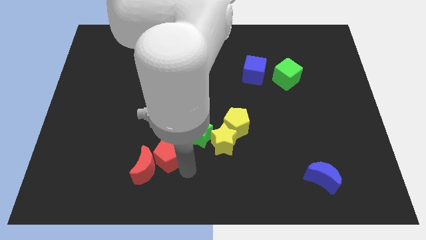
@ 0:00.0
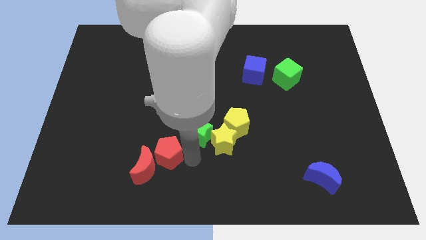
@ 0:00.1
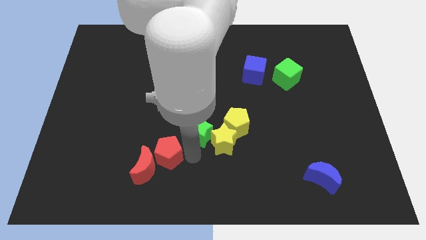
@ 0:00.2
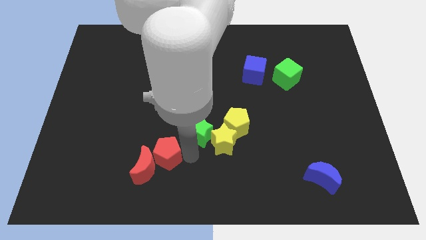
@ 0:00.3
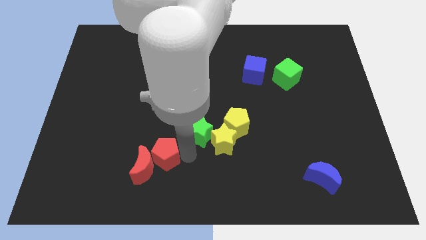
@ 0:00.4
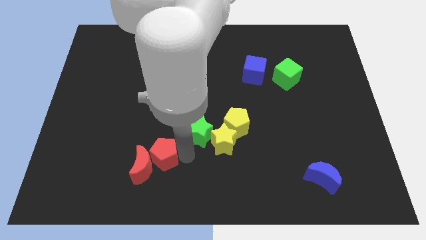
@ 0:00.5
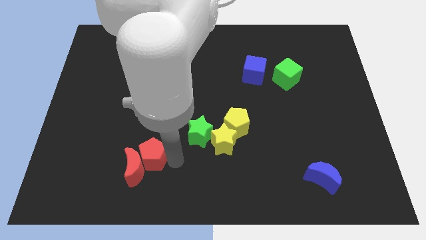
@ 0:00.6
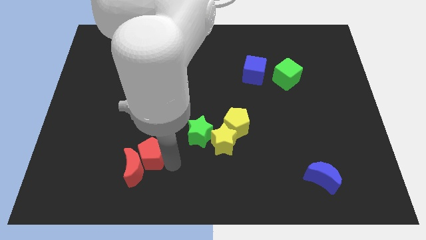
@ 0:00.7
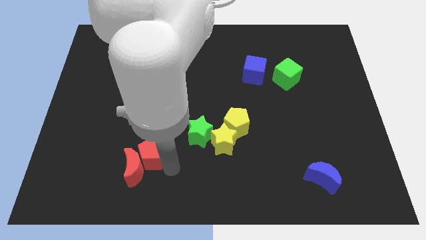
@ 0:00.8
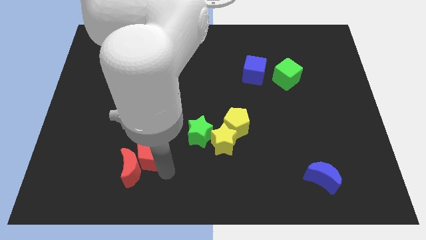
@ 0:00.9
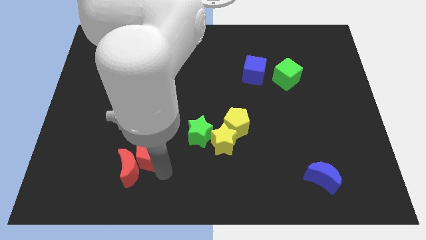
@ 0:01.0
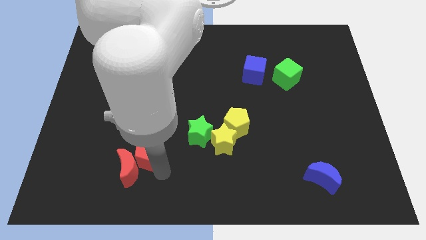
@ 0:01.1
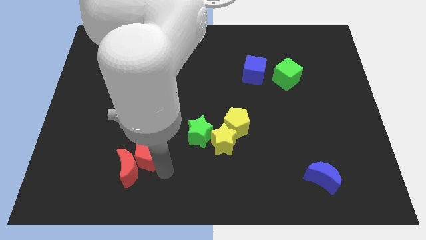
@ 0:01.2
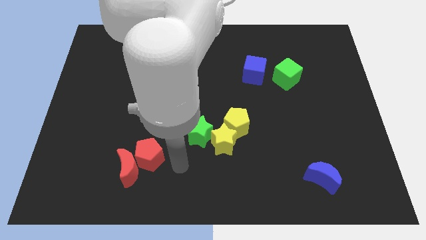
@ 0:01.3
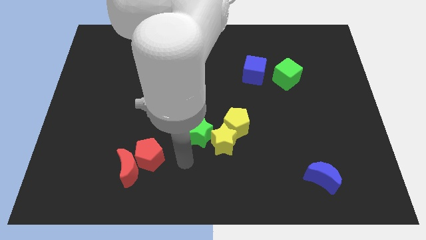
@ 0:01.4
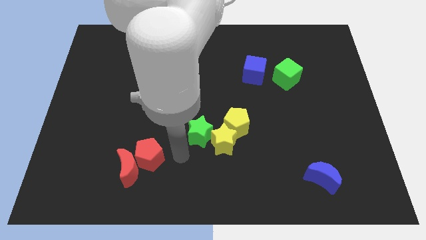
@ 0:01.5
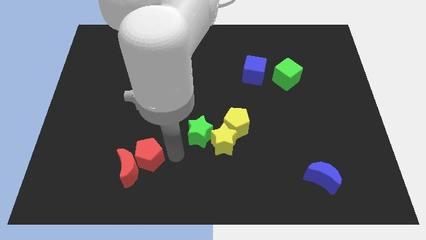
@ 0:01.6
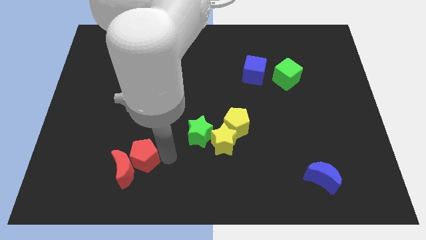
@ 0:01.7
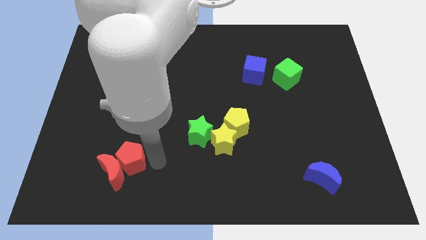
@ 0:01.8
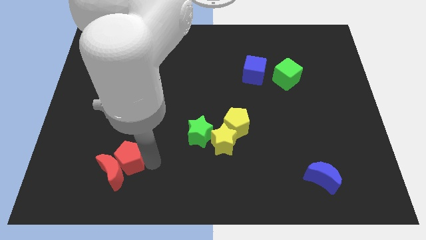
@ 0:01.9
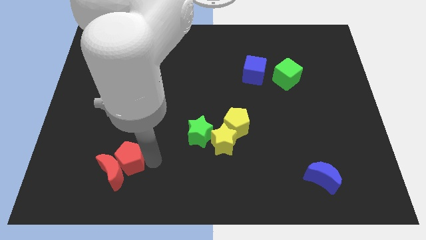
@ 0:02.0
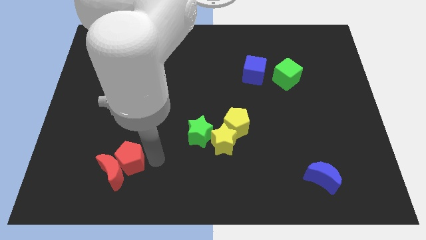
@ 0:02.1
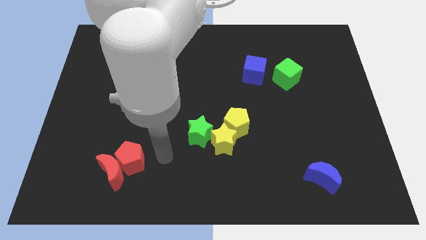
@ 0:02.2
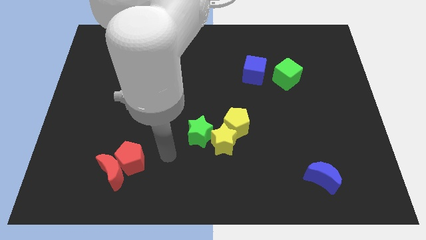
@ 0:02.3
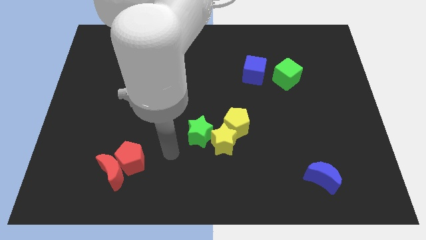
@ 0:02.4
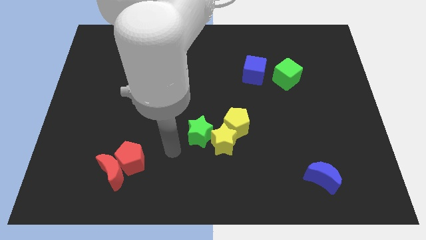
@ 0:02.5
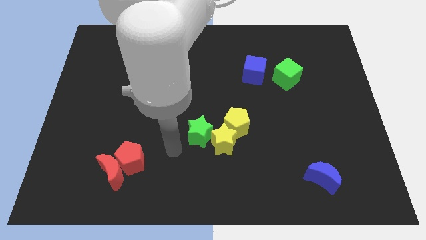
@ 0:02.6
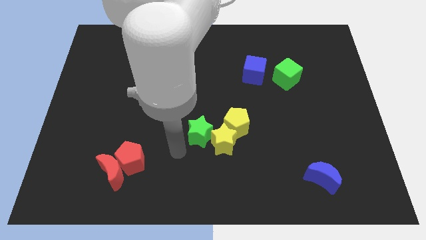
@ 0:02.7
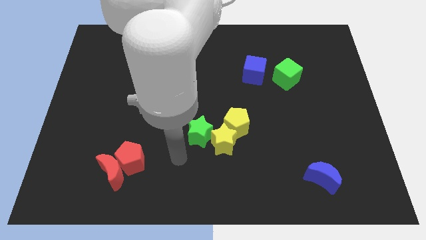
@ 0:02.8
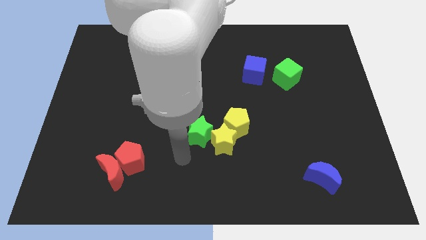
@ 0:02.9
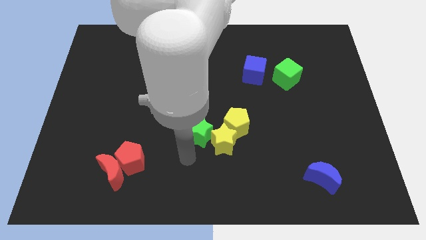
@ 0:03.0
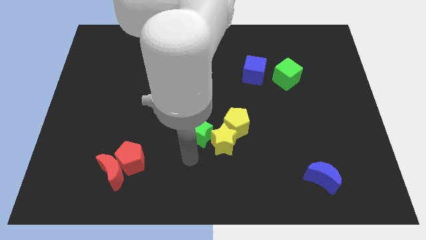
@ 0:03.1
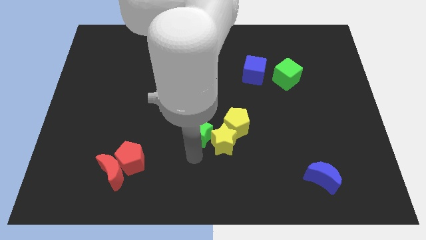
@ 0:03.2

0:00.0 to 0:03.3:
move the group of red blocks slightly towards the bottom left side of the board

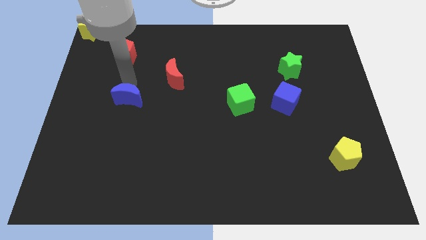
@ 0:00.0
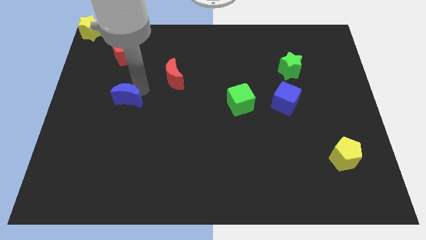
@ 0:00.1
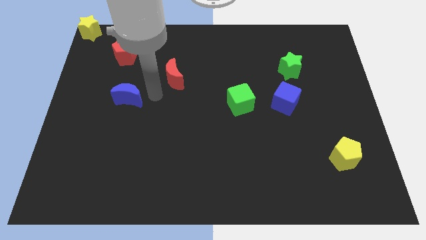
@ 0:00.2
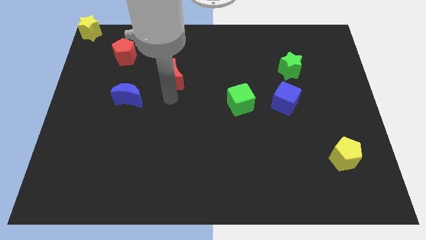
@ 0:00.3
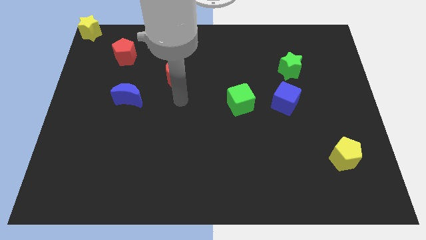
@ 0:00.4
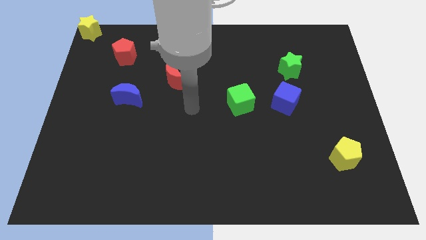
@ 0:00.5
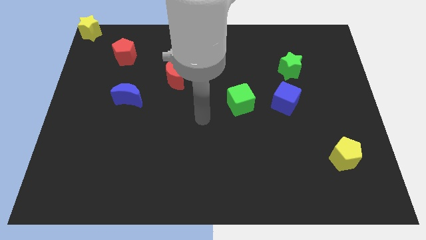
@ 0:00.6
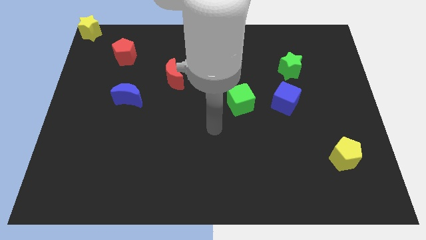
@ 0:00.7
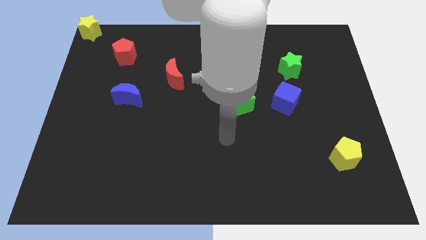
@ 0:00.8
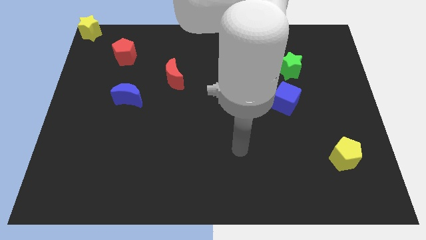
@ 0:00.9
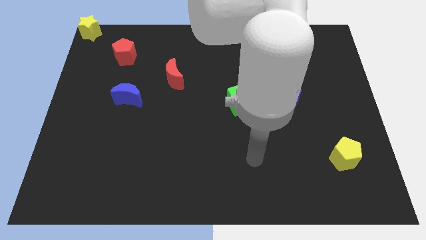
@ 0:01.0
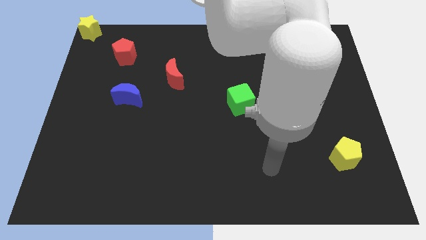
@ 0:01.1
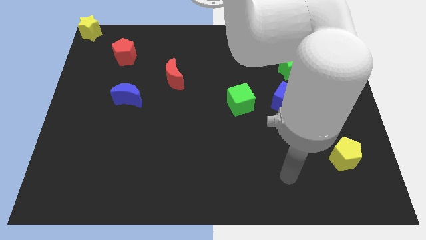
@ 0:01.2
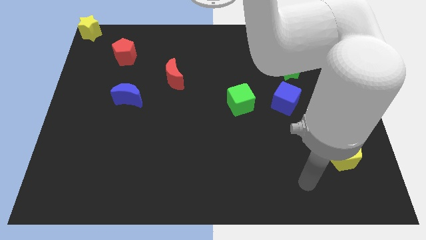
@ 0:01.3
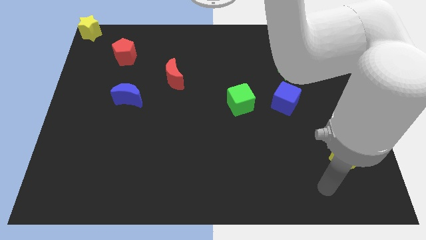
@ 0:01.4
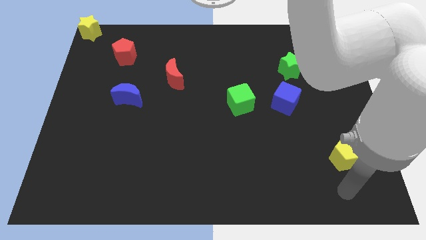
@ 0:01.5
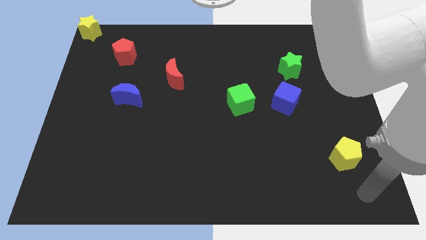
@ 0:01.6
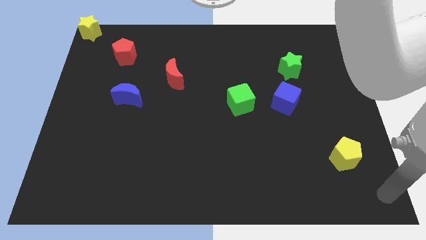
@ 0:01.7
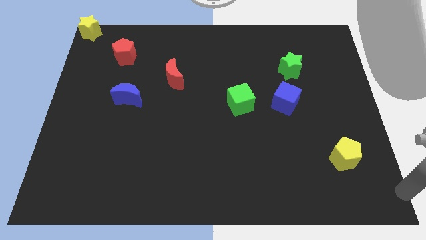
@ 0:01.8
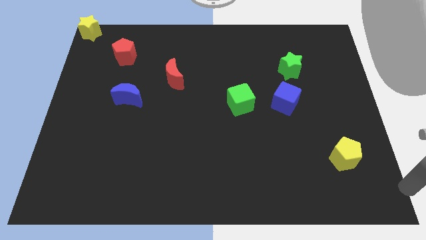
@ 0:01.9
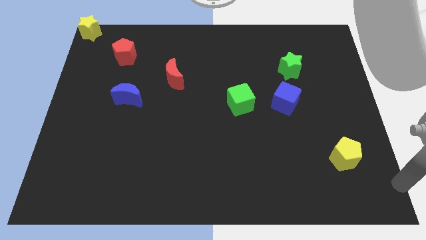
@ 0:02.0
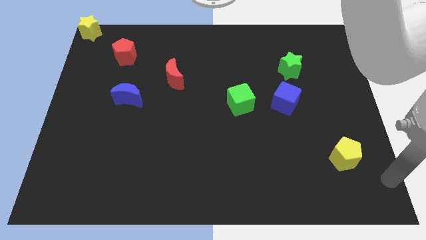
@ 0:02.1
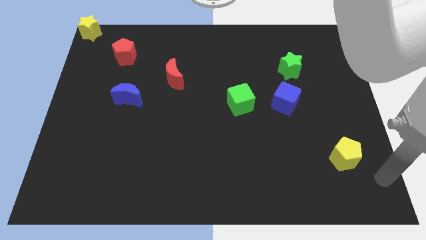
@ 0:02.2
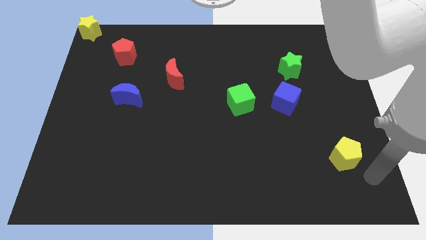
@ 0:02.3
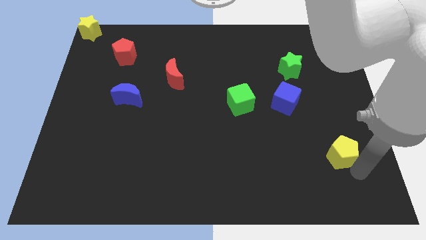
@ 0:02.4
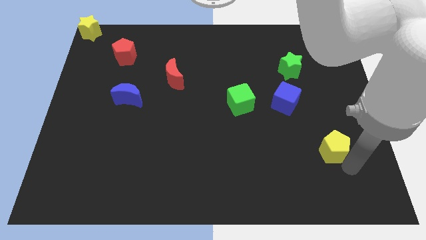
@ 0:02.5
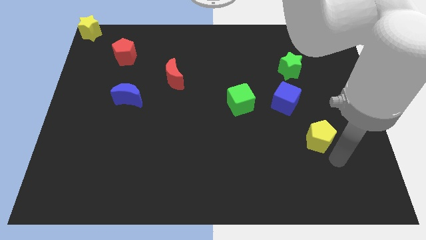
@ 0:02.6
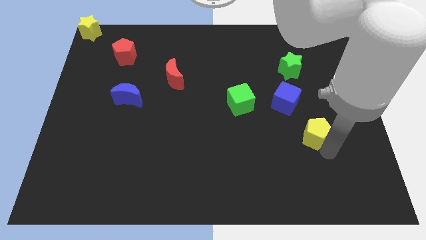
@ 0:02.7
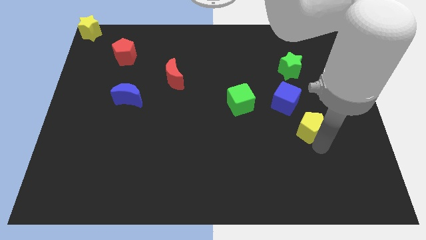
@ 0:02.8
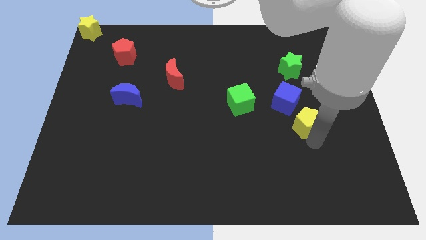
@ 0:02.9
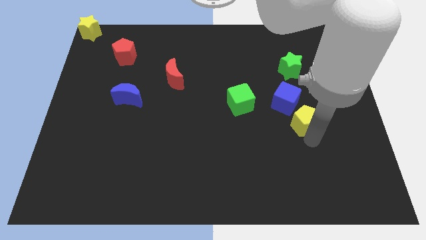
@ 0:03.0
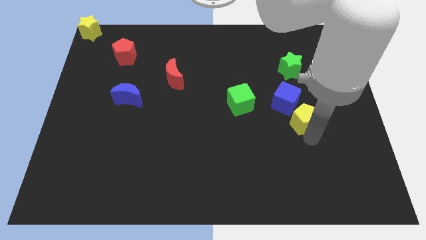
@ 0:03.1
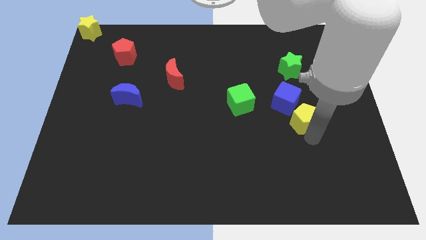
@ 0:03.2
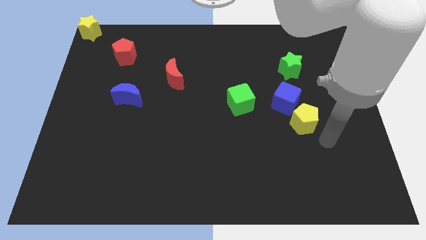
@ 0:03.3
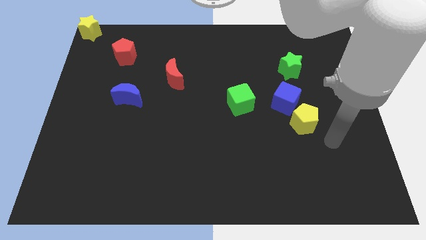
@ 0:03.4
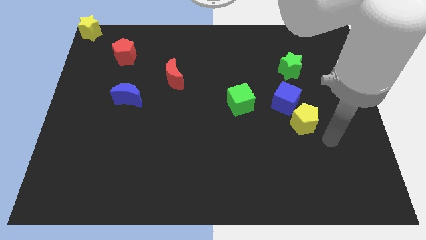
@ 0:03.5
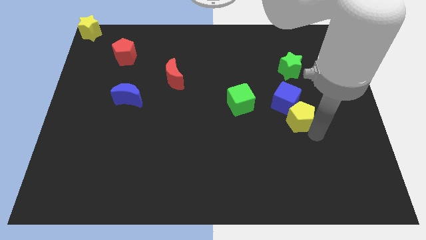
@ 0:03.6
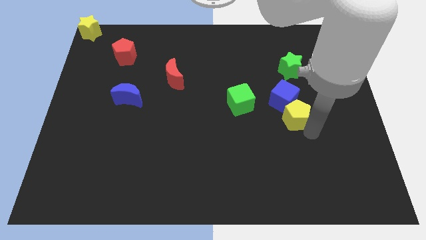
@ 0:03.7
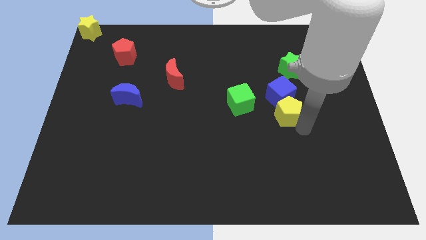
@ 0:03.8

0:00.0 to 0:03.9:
place yellow pentagon below blue cube

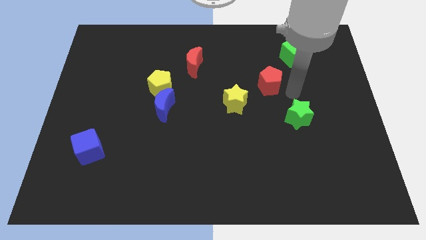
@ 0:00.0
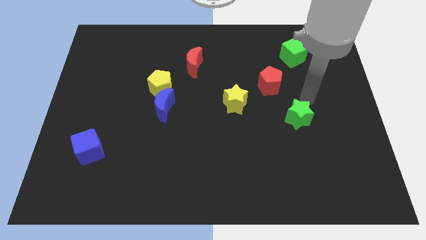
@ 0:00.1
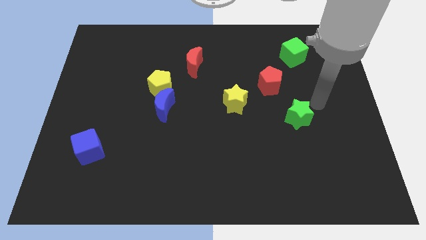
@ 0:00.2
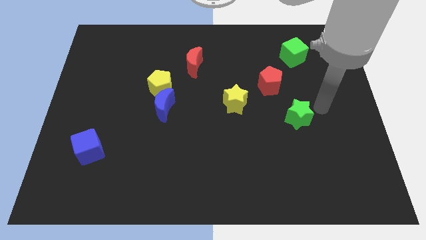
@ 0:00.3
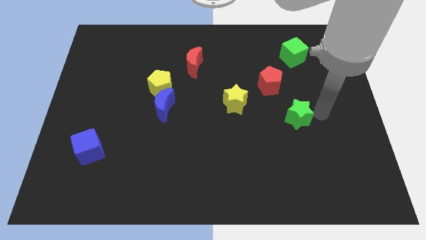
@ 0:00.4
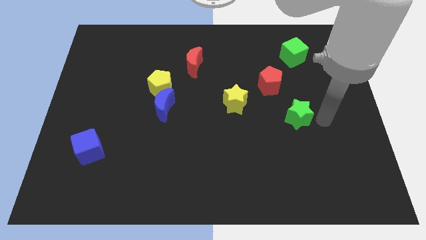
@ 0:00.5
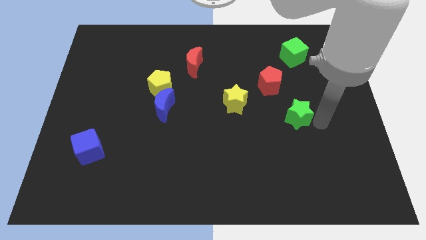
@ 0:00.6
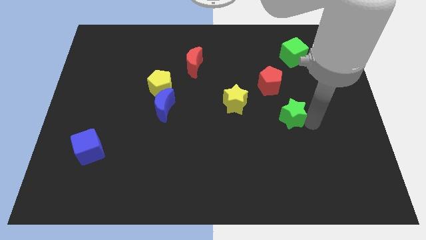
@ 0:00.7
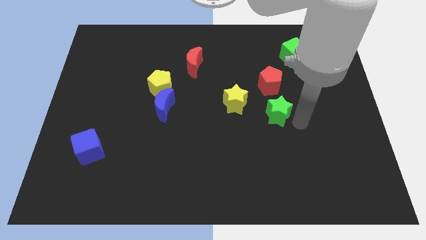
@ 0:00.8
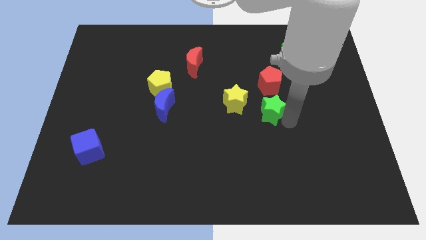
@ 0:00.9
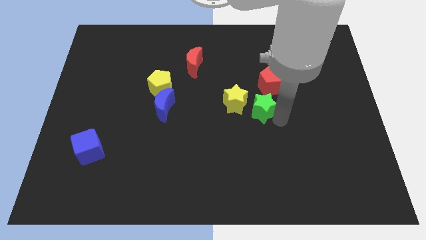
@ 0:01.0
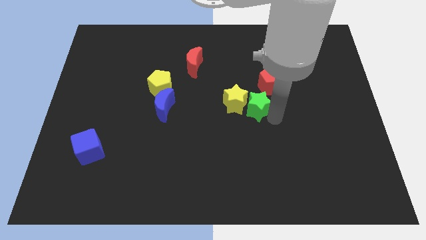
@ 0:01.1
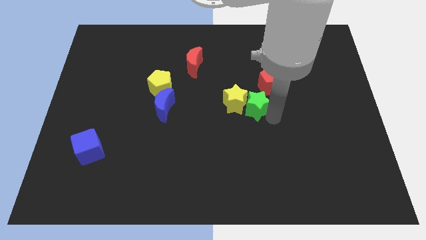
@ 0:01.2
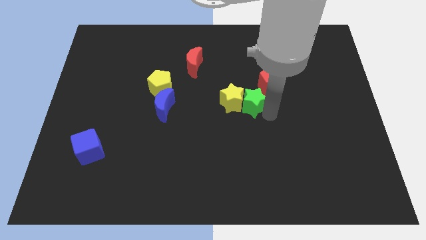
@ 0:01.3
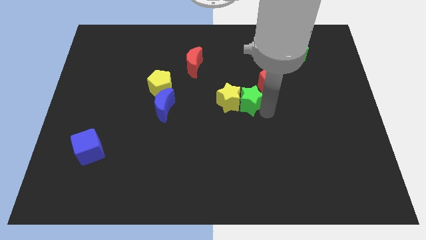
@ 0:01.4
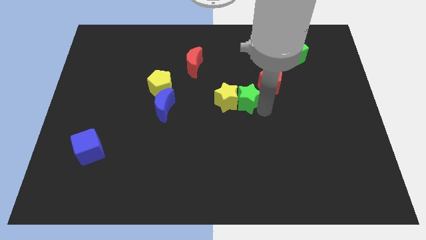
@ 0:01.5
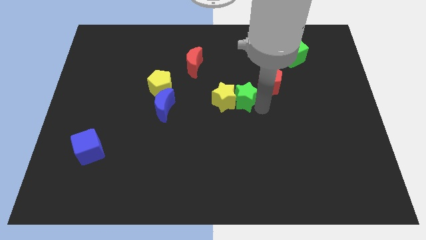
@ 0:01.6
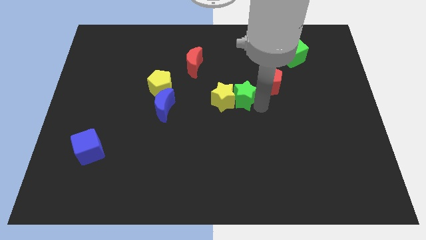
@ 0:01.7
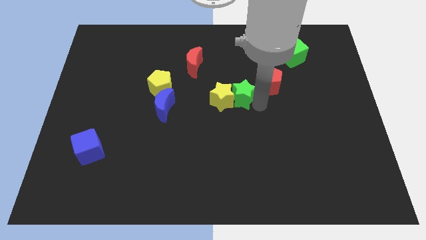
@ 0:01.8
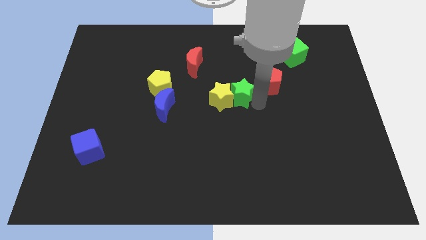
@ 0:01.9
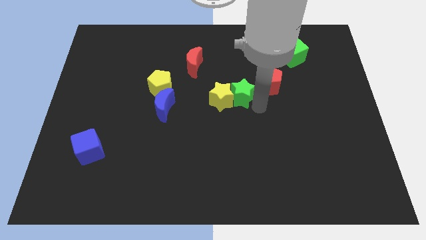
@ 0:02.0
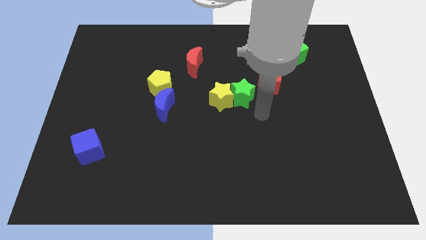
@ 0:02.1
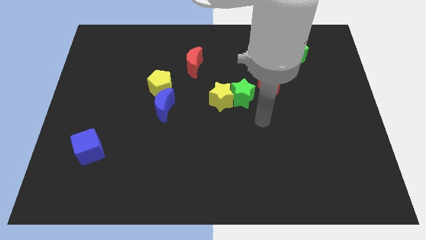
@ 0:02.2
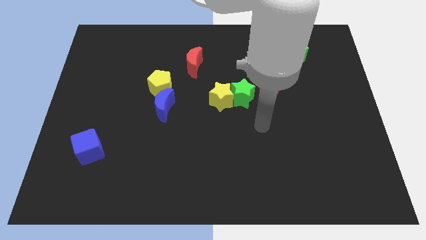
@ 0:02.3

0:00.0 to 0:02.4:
put the group of stars at the center of the board
